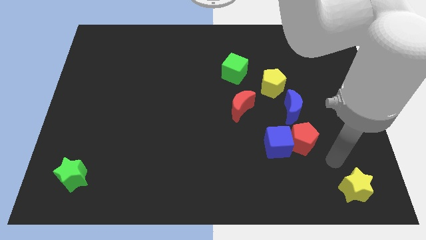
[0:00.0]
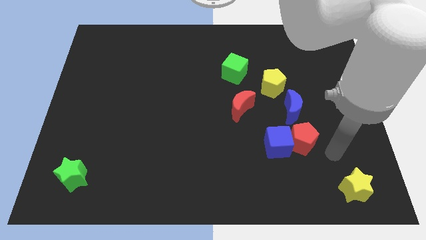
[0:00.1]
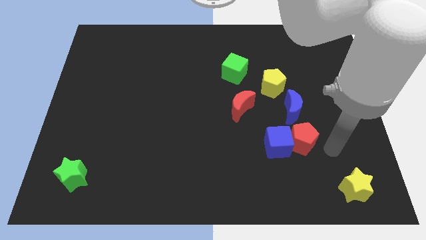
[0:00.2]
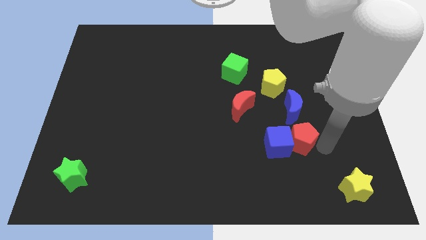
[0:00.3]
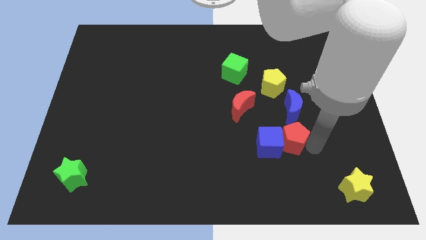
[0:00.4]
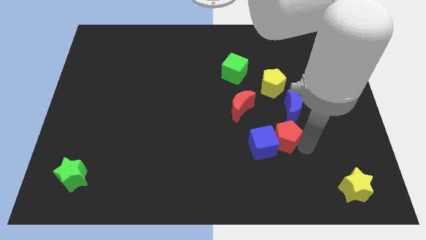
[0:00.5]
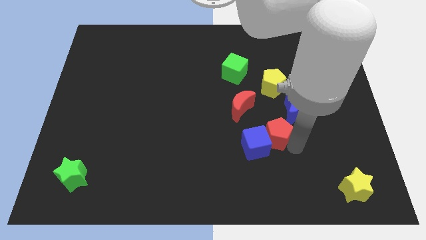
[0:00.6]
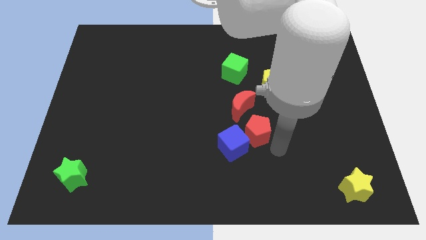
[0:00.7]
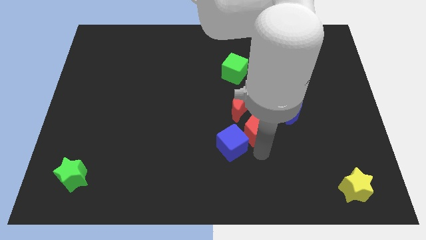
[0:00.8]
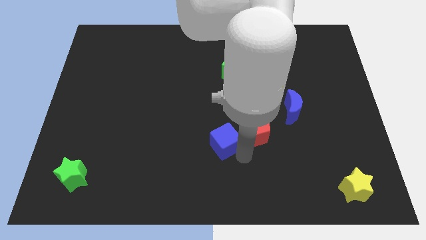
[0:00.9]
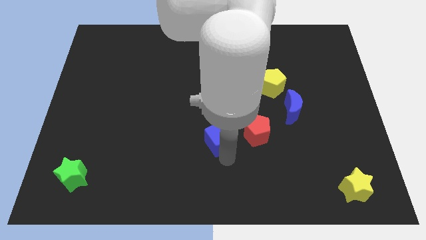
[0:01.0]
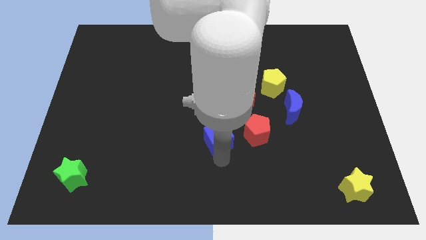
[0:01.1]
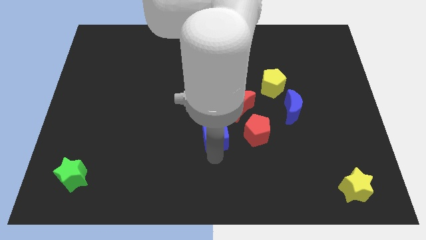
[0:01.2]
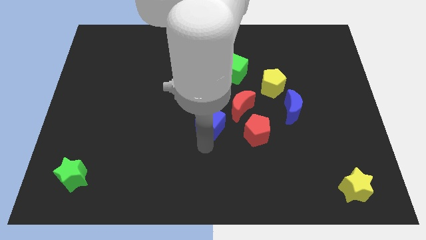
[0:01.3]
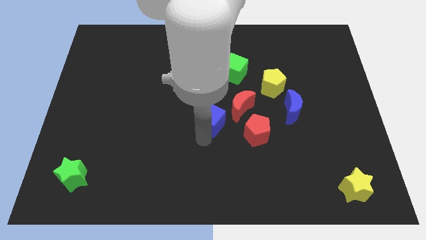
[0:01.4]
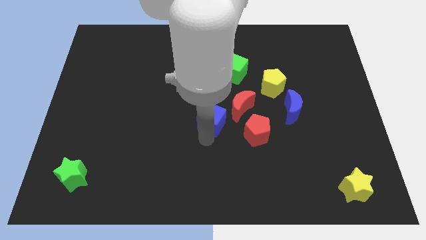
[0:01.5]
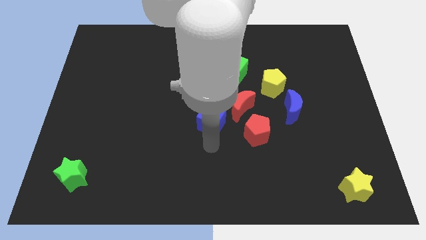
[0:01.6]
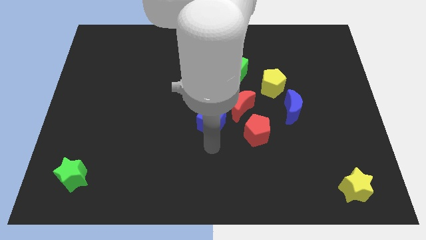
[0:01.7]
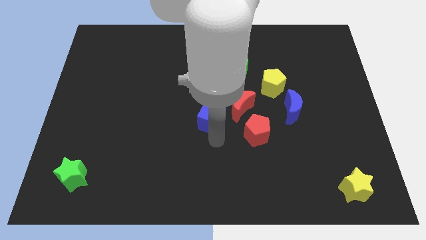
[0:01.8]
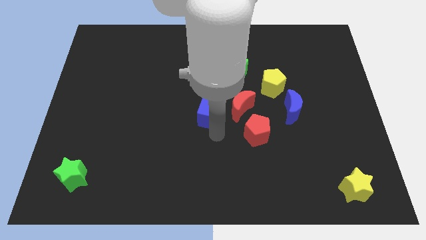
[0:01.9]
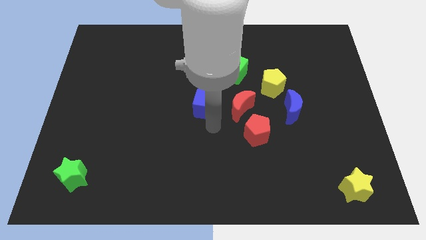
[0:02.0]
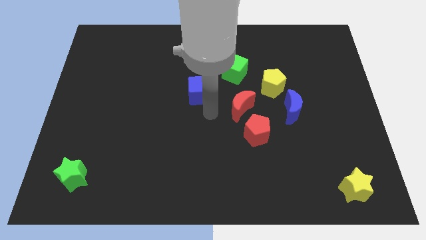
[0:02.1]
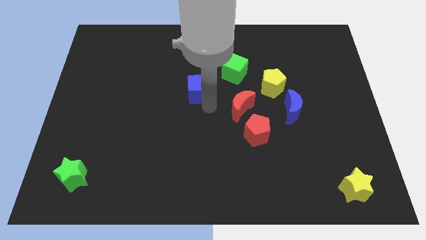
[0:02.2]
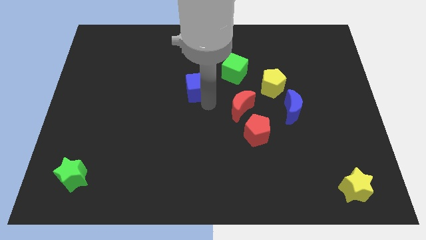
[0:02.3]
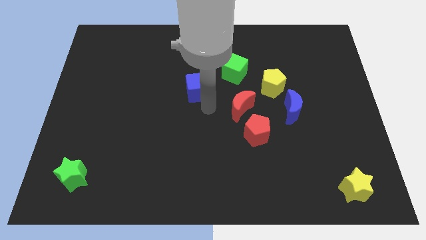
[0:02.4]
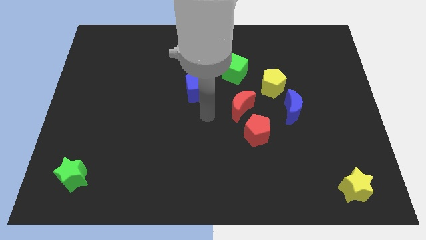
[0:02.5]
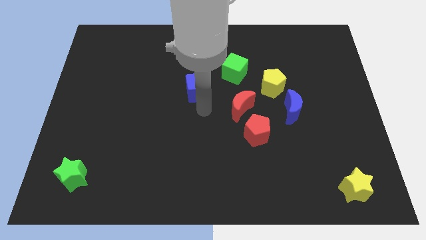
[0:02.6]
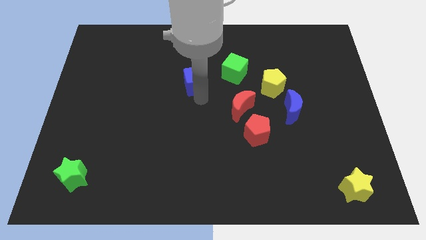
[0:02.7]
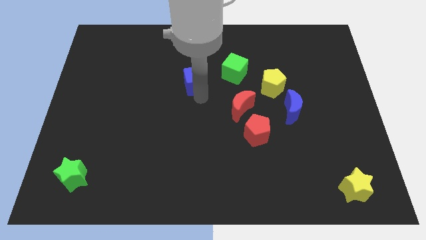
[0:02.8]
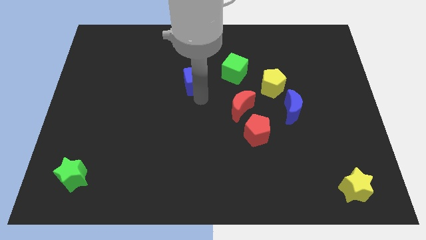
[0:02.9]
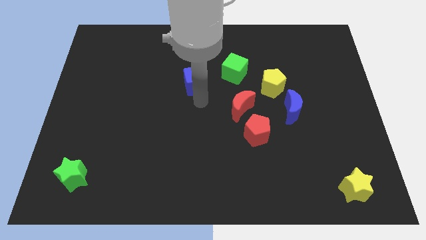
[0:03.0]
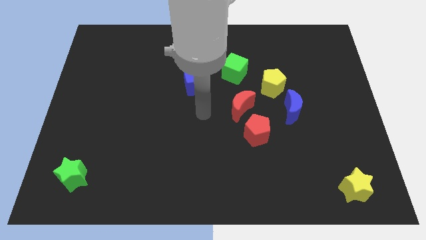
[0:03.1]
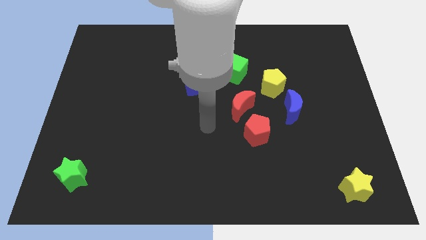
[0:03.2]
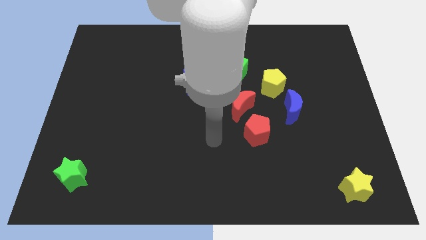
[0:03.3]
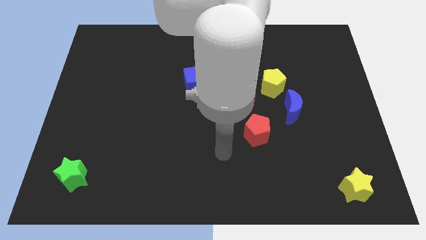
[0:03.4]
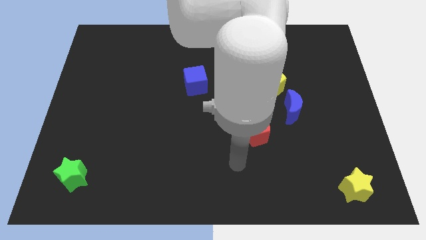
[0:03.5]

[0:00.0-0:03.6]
push the blue cube towards the green cube

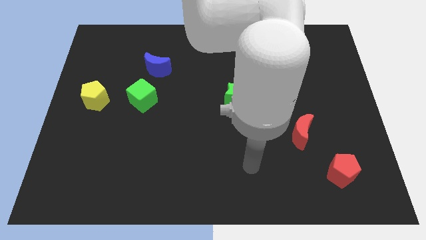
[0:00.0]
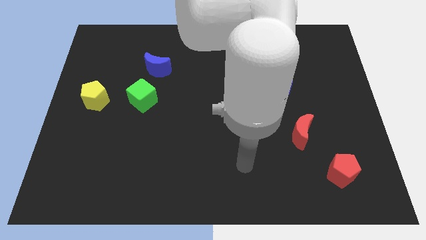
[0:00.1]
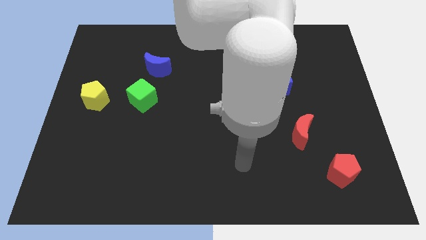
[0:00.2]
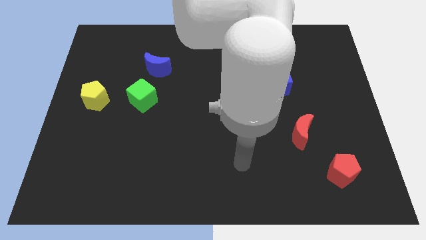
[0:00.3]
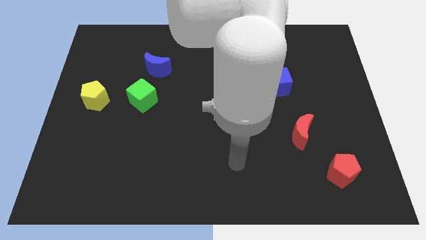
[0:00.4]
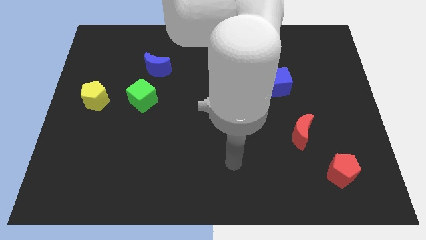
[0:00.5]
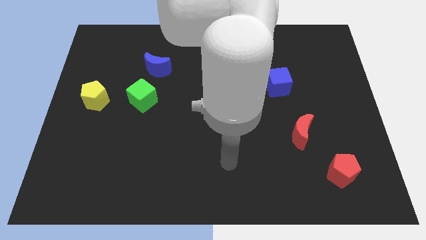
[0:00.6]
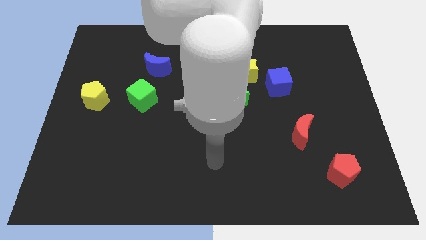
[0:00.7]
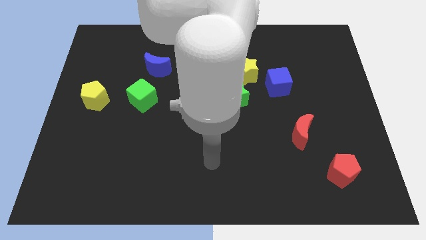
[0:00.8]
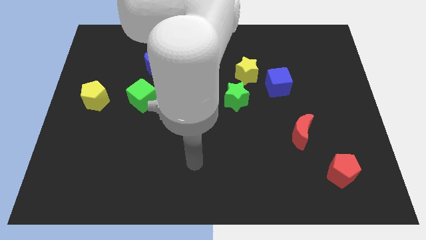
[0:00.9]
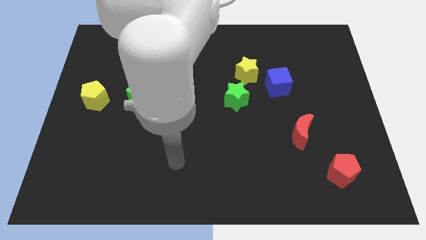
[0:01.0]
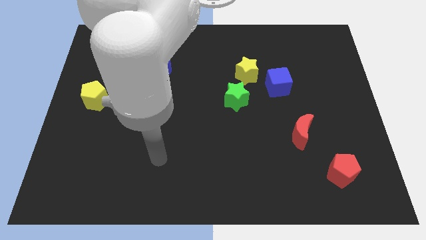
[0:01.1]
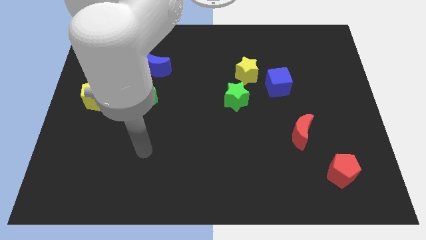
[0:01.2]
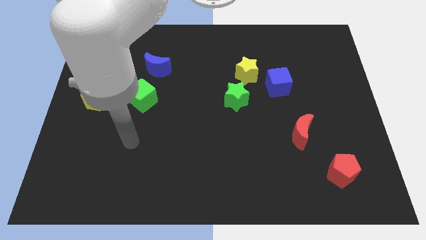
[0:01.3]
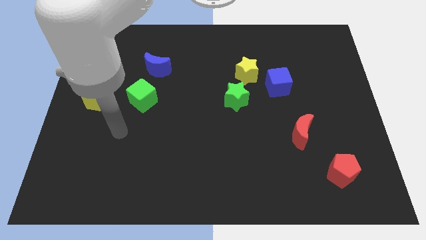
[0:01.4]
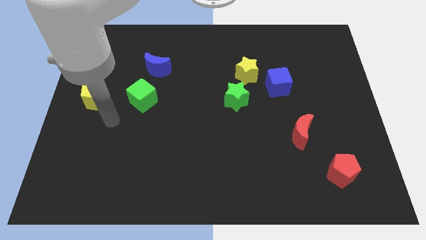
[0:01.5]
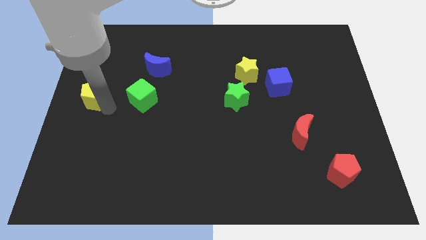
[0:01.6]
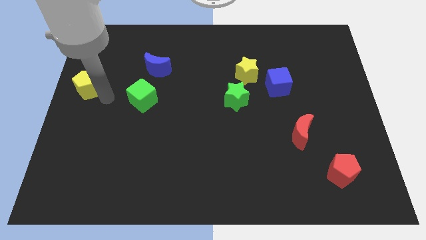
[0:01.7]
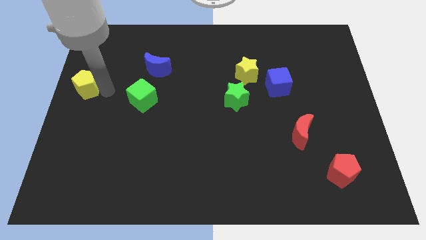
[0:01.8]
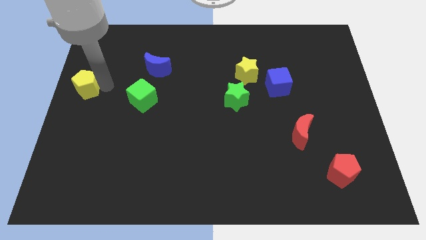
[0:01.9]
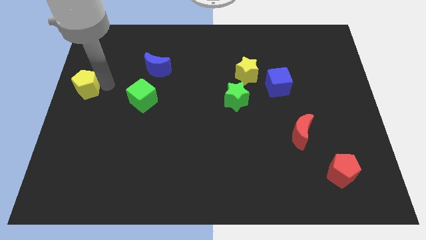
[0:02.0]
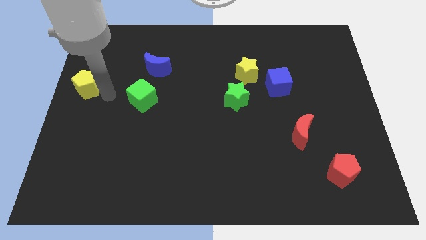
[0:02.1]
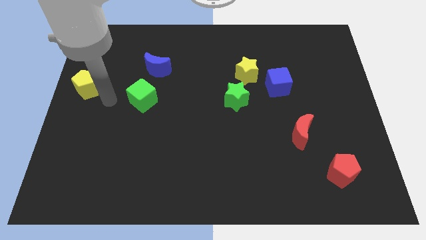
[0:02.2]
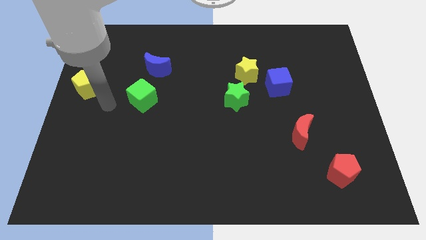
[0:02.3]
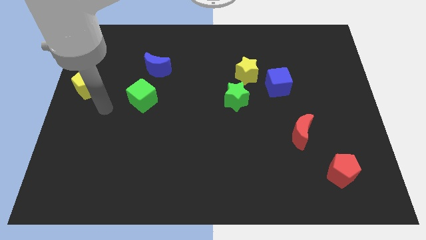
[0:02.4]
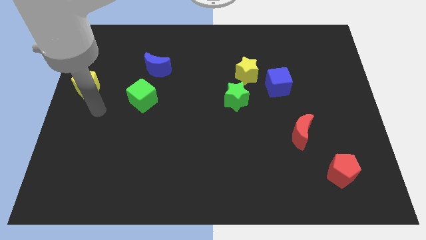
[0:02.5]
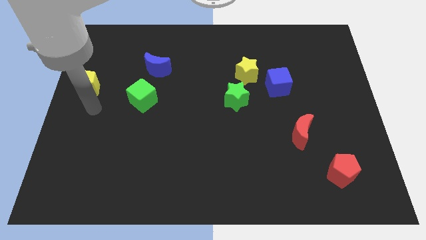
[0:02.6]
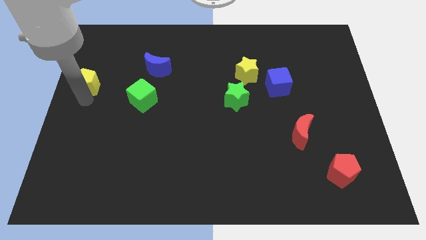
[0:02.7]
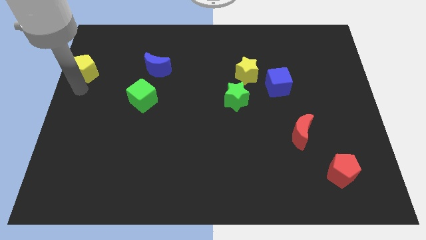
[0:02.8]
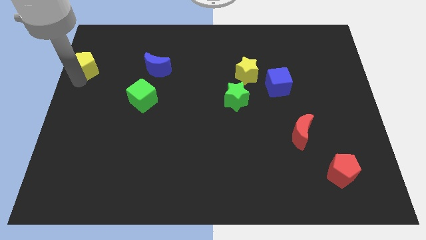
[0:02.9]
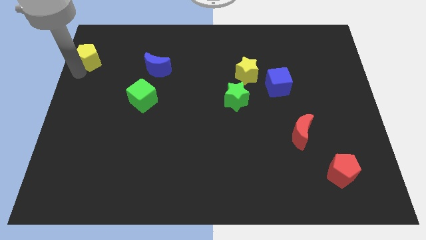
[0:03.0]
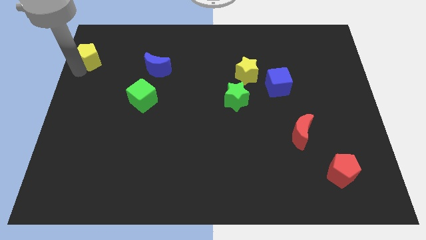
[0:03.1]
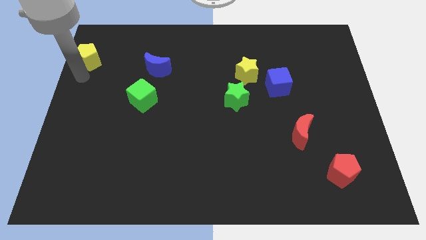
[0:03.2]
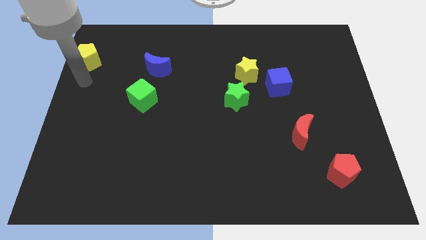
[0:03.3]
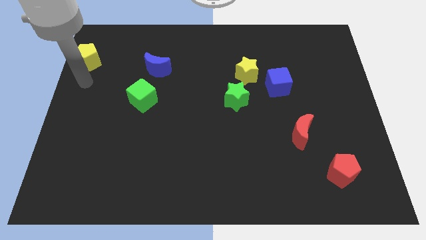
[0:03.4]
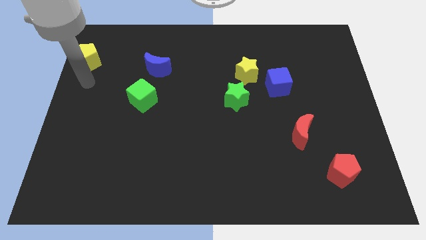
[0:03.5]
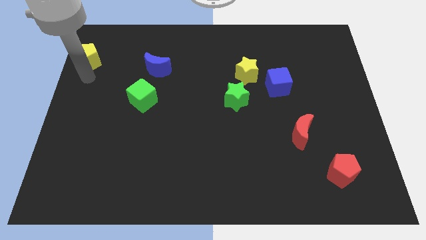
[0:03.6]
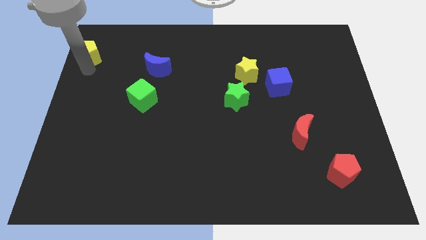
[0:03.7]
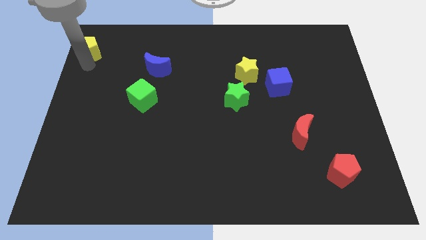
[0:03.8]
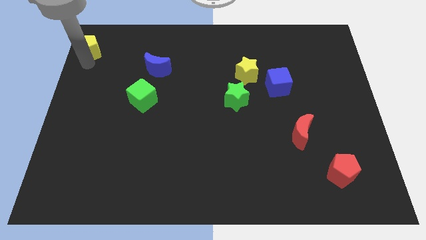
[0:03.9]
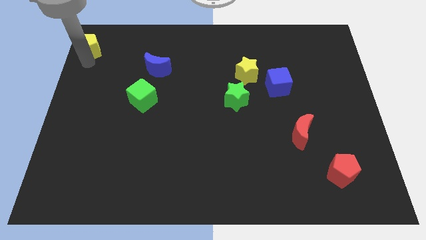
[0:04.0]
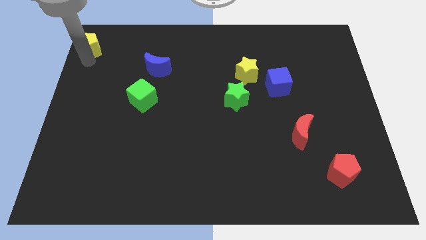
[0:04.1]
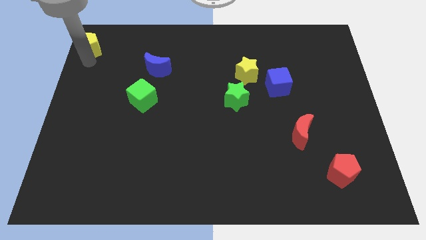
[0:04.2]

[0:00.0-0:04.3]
place the yellow pentagon to the top left corner of the board

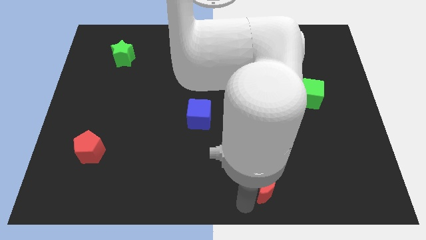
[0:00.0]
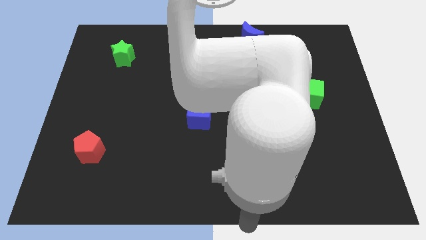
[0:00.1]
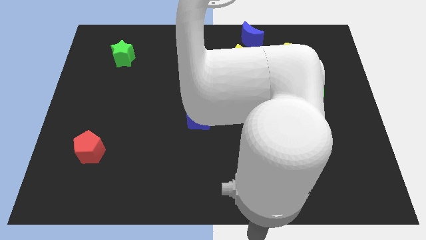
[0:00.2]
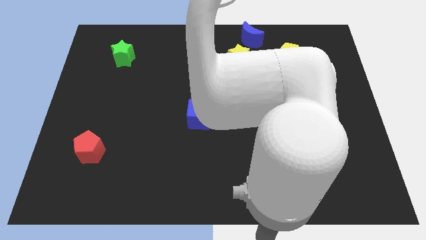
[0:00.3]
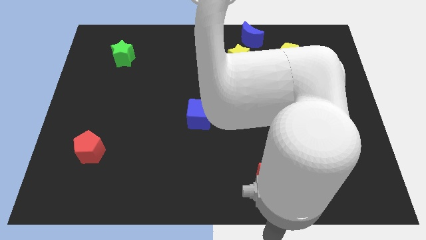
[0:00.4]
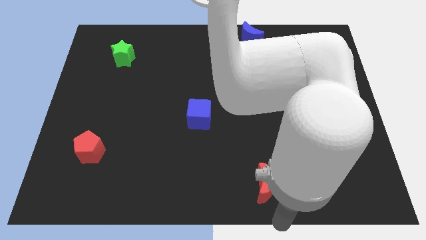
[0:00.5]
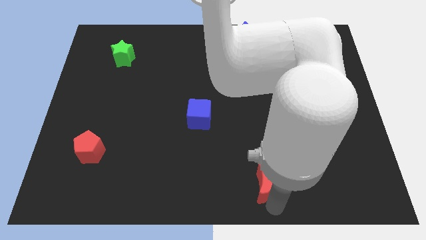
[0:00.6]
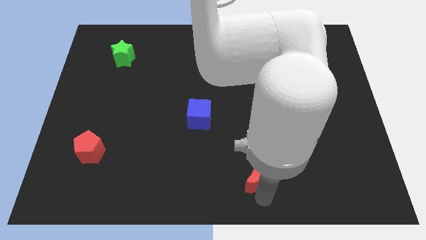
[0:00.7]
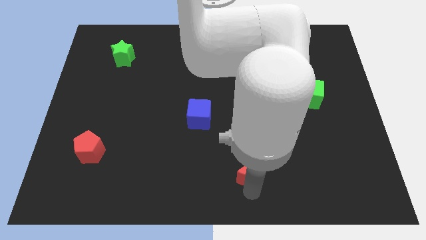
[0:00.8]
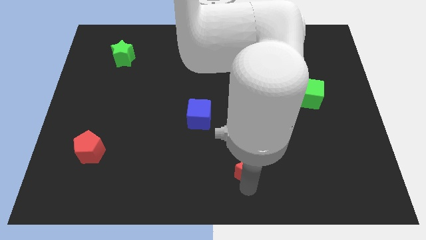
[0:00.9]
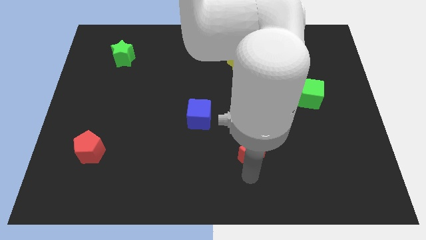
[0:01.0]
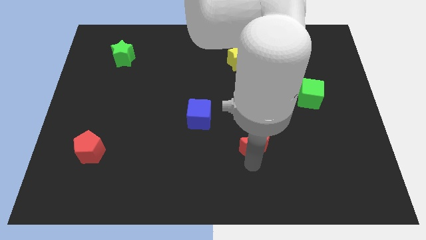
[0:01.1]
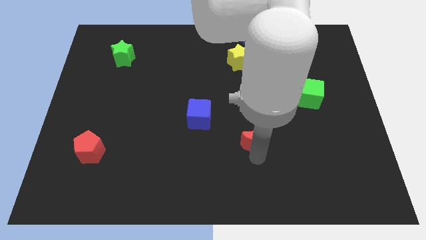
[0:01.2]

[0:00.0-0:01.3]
push the red crescent slightly to the top
